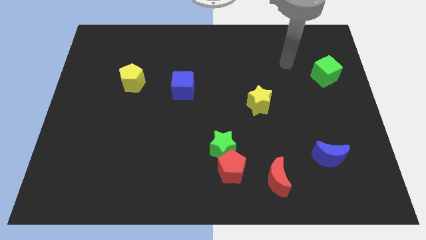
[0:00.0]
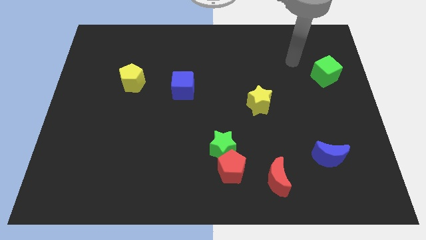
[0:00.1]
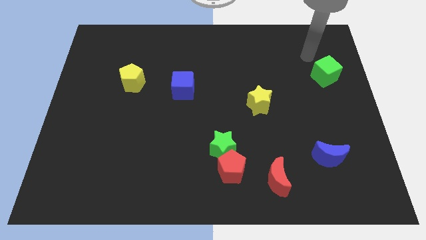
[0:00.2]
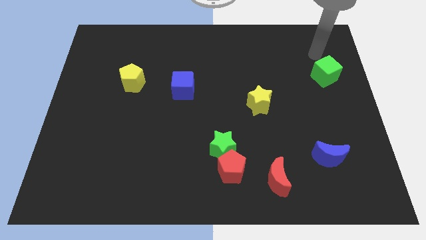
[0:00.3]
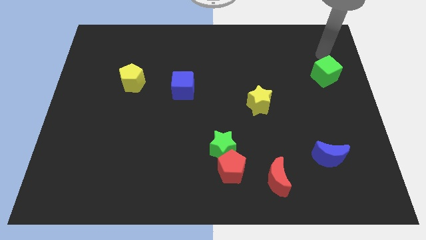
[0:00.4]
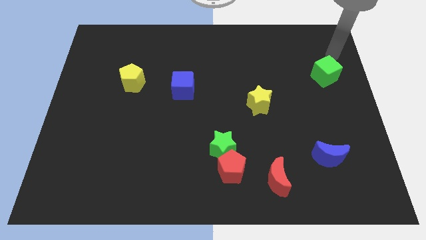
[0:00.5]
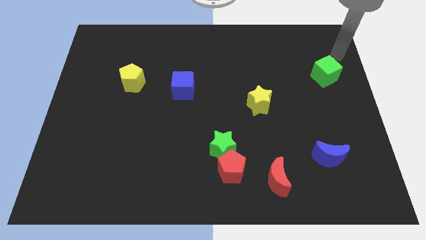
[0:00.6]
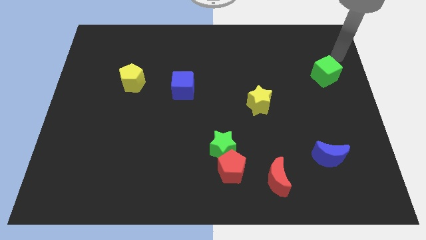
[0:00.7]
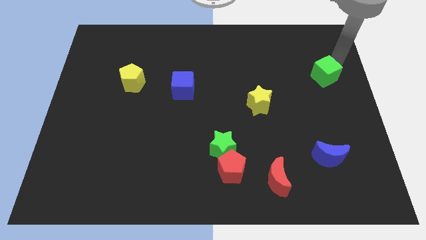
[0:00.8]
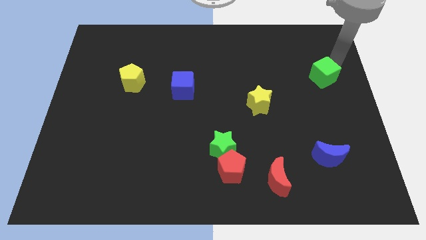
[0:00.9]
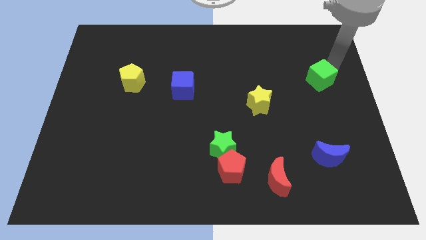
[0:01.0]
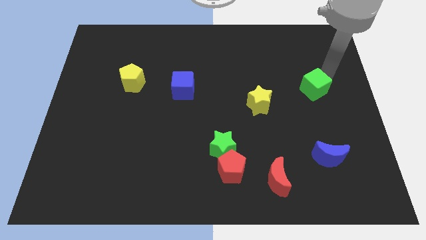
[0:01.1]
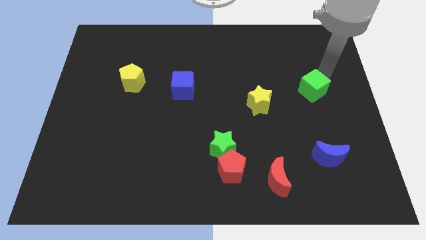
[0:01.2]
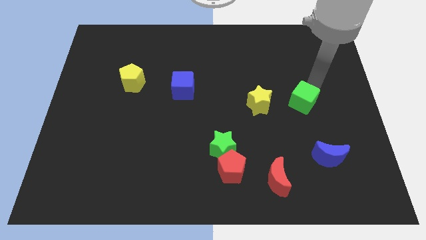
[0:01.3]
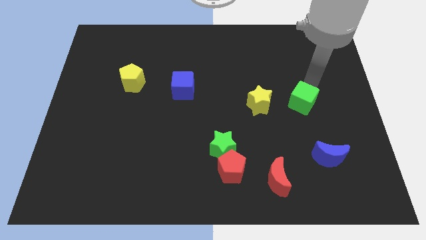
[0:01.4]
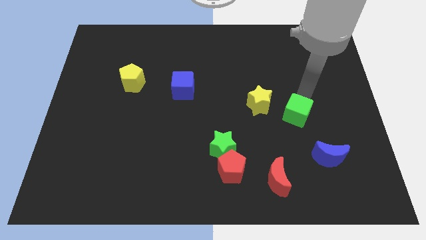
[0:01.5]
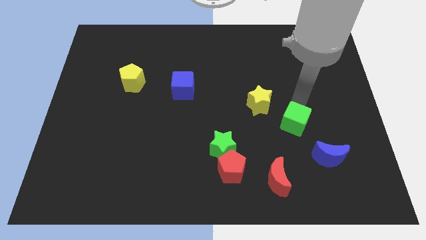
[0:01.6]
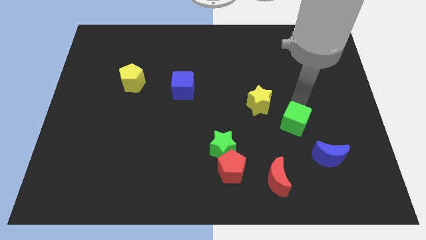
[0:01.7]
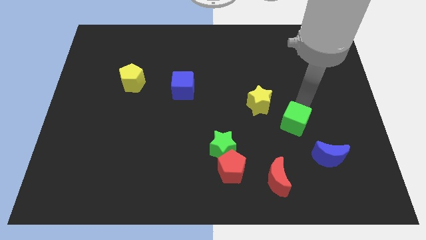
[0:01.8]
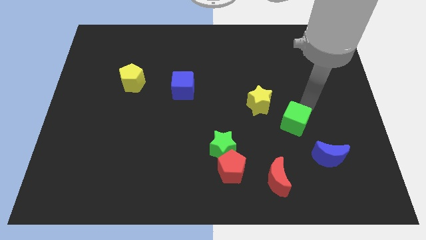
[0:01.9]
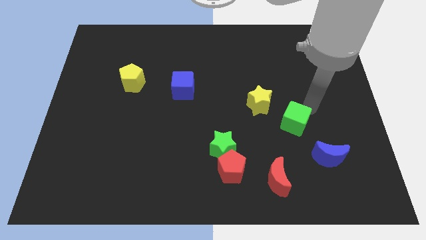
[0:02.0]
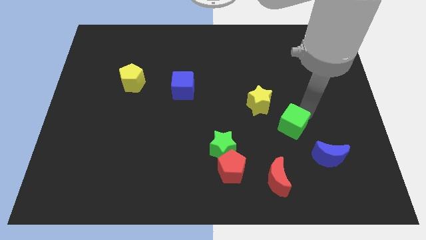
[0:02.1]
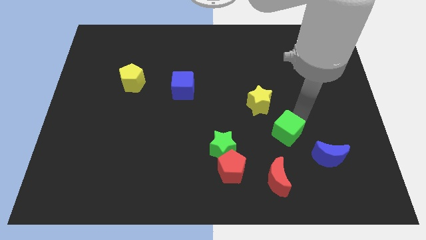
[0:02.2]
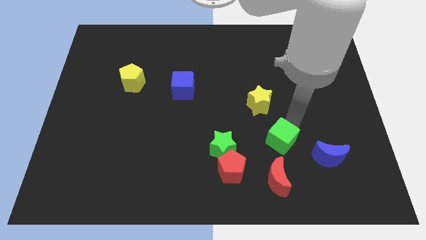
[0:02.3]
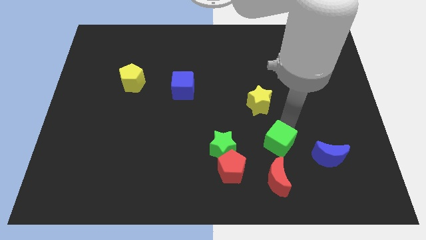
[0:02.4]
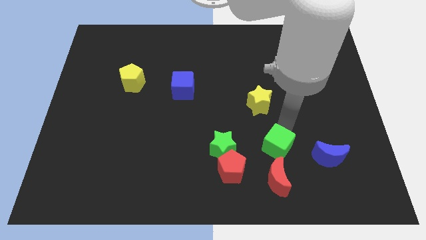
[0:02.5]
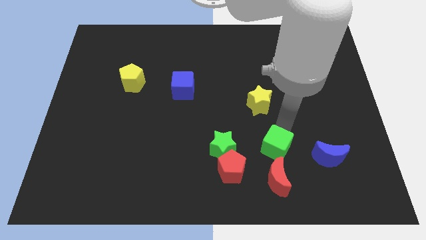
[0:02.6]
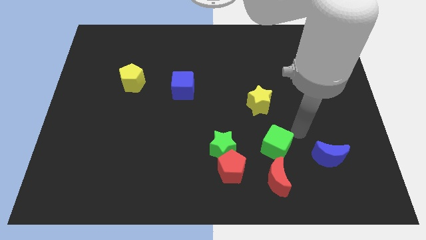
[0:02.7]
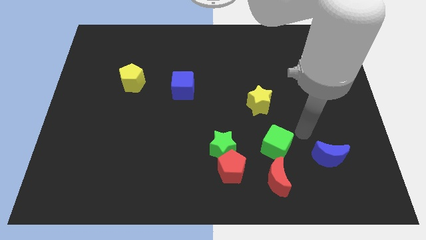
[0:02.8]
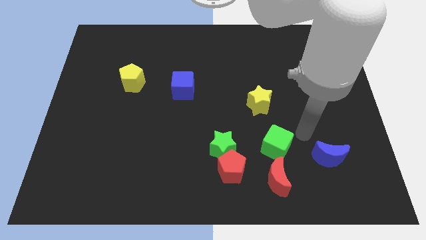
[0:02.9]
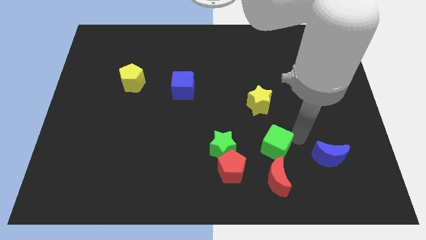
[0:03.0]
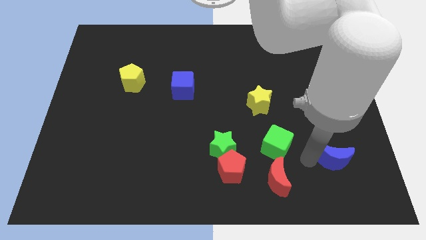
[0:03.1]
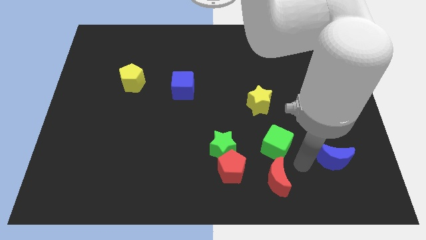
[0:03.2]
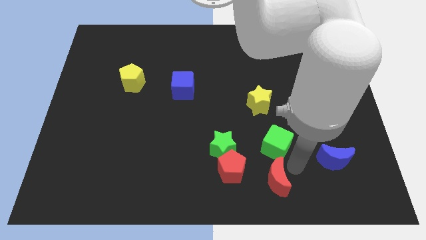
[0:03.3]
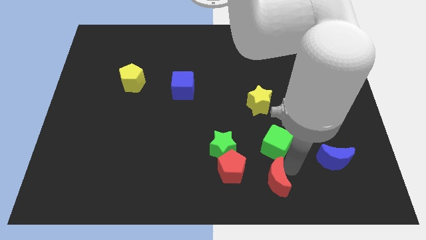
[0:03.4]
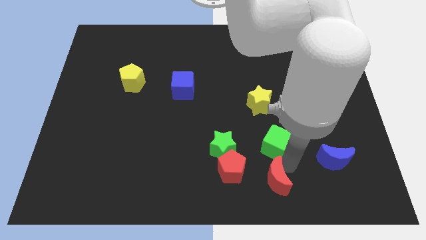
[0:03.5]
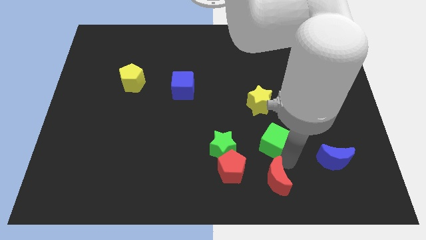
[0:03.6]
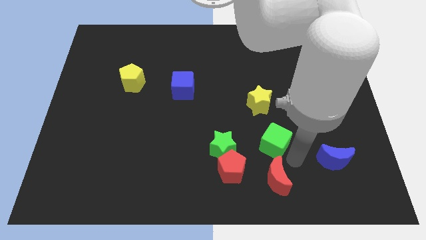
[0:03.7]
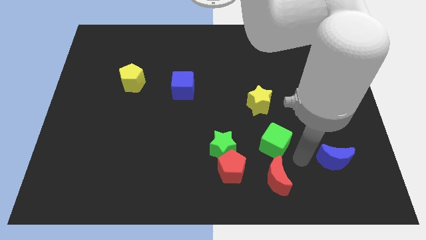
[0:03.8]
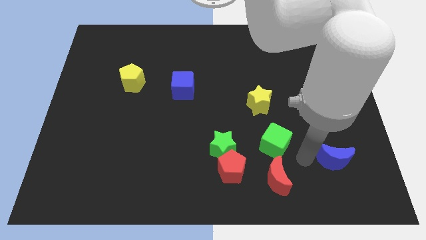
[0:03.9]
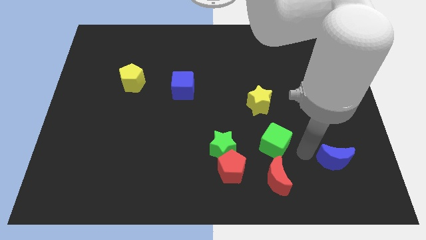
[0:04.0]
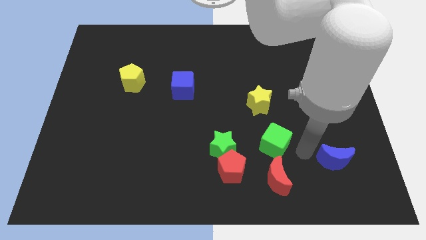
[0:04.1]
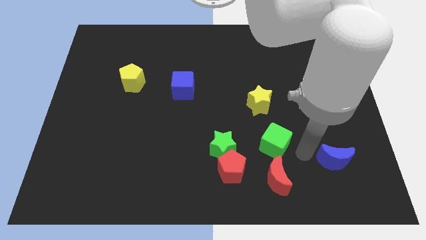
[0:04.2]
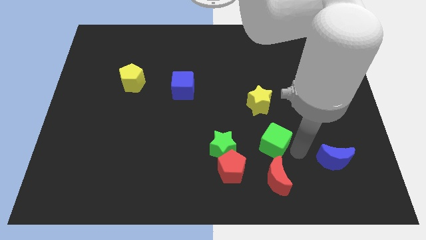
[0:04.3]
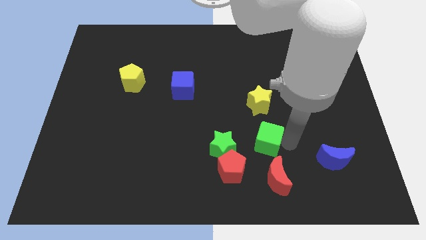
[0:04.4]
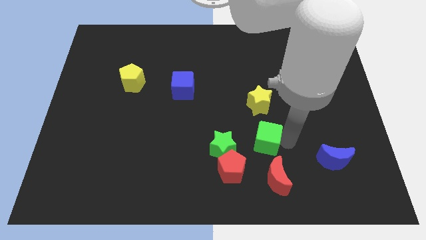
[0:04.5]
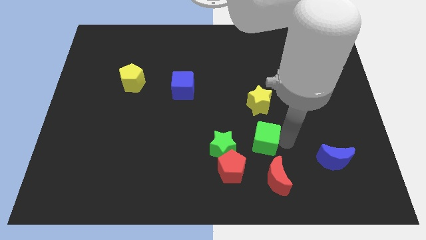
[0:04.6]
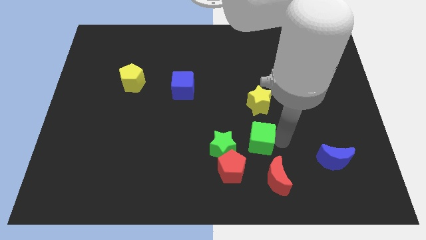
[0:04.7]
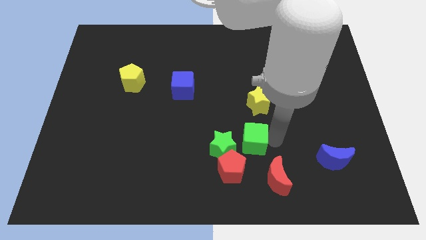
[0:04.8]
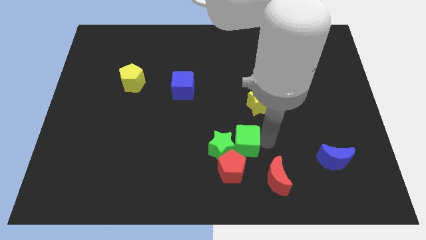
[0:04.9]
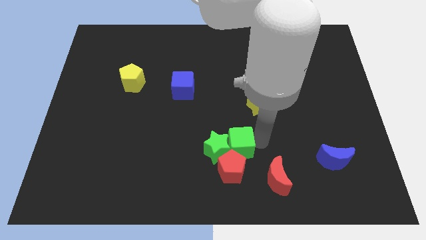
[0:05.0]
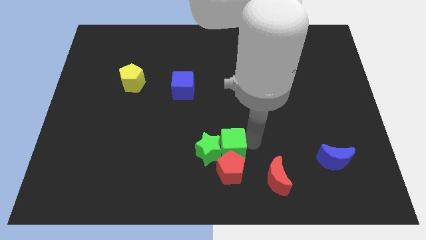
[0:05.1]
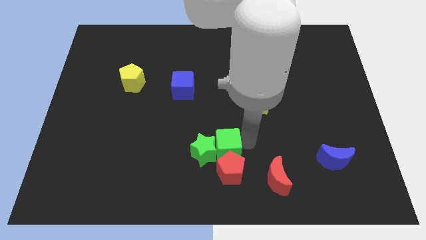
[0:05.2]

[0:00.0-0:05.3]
move the green cube close to the red pentagon

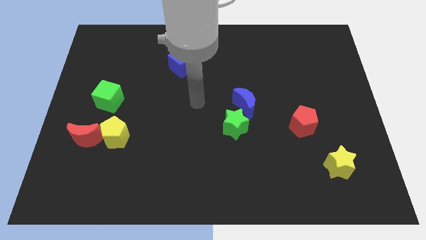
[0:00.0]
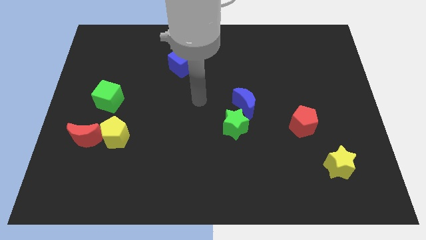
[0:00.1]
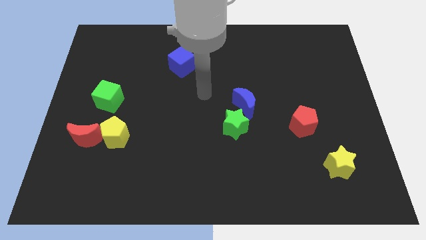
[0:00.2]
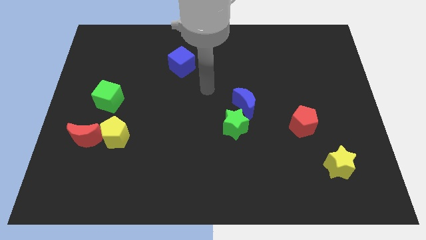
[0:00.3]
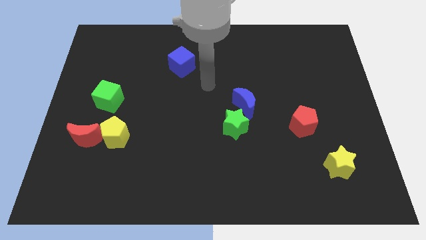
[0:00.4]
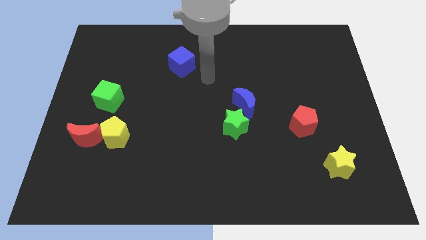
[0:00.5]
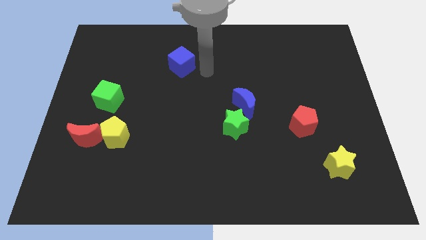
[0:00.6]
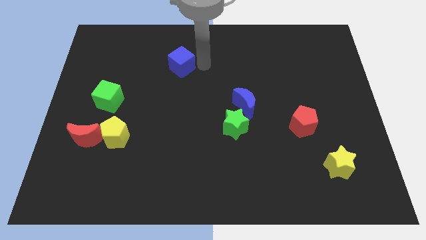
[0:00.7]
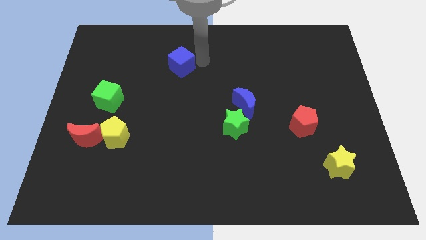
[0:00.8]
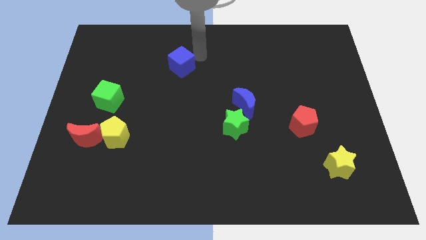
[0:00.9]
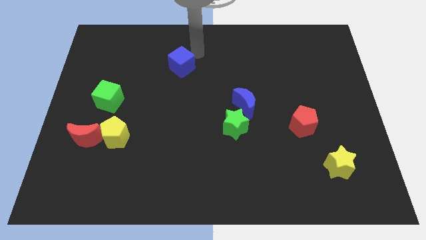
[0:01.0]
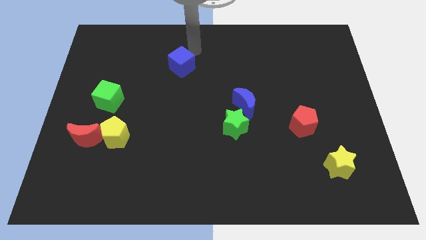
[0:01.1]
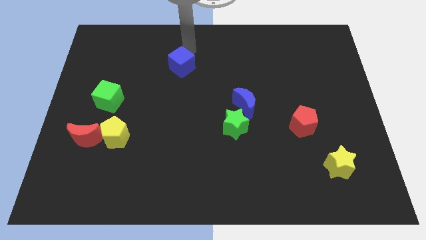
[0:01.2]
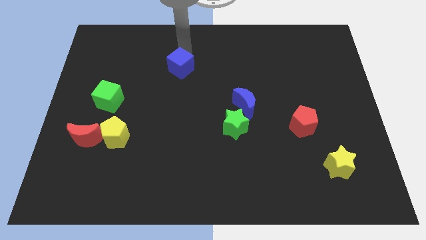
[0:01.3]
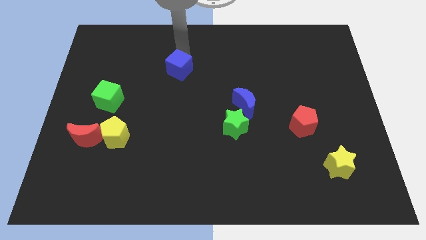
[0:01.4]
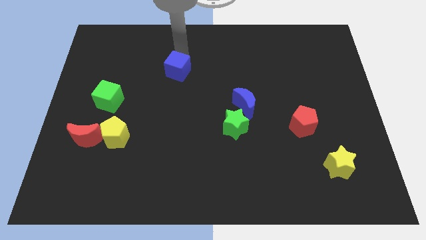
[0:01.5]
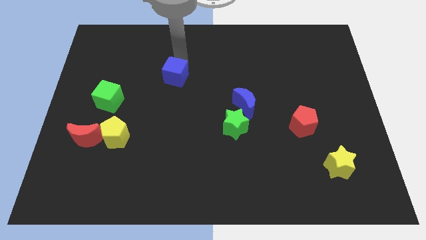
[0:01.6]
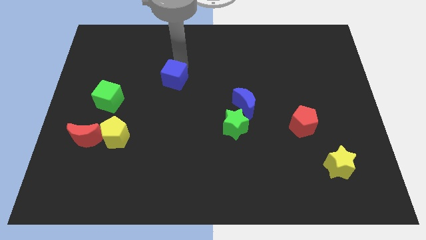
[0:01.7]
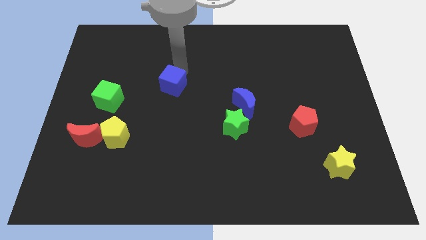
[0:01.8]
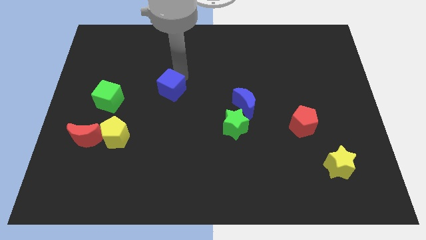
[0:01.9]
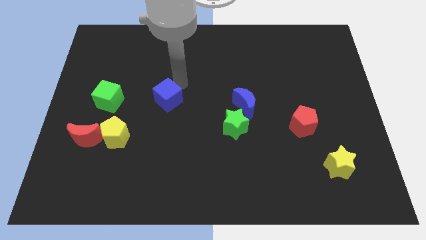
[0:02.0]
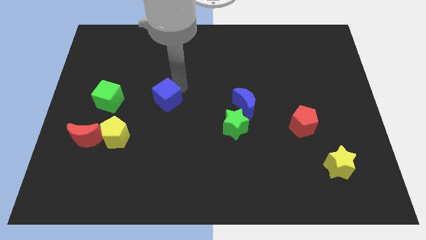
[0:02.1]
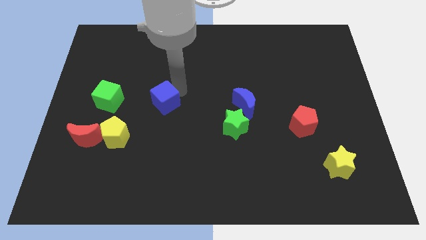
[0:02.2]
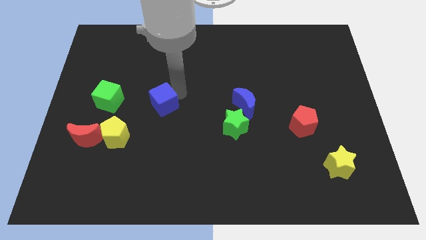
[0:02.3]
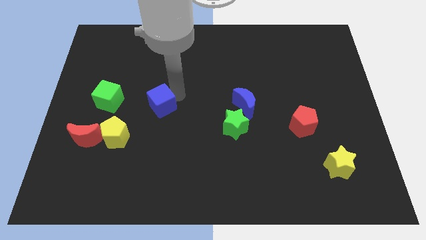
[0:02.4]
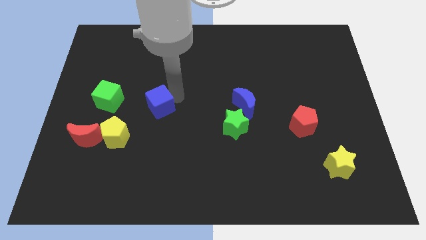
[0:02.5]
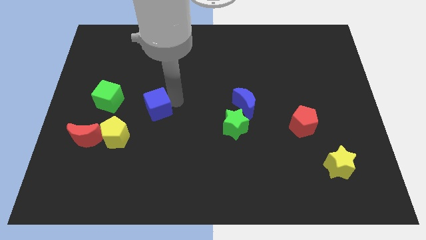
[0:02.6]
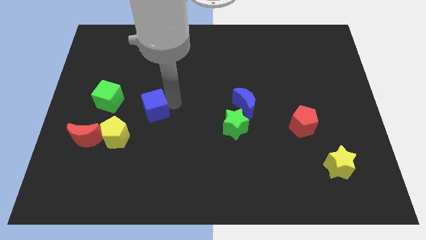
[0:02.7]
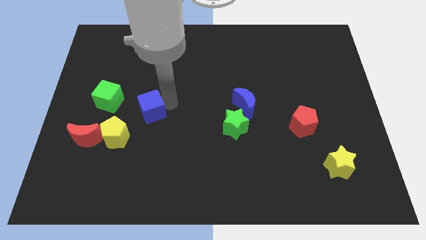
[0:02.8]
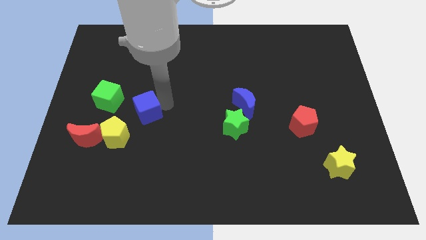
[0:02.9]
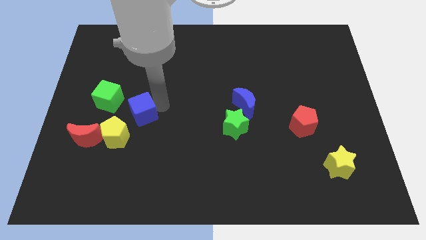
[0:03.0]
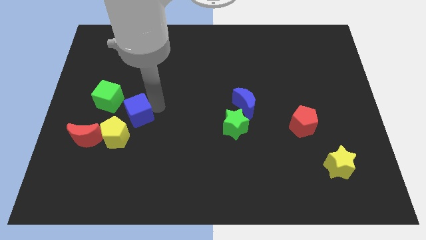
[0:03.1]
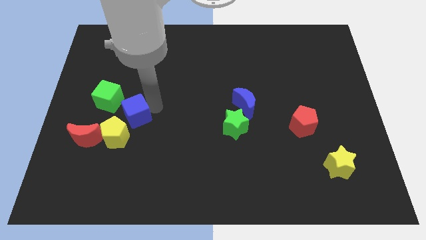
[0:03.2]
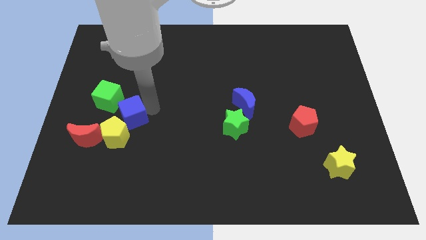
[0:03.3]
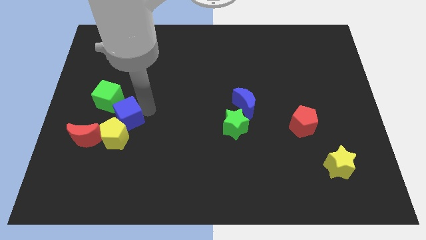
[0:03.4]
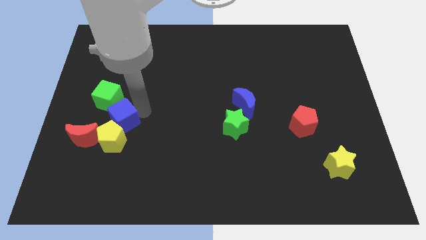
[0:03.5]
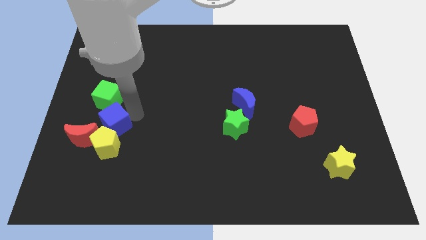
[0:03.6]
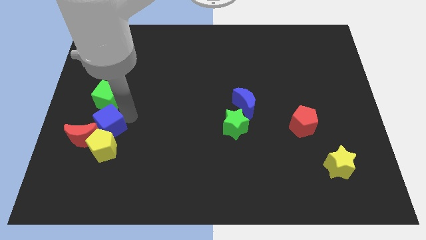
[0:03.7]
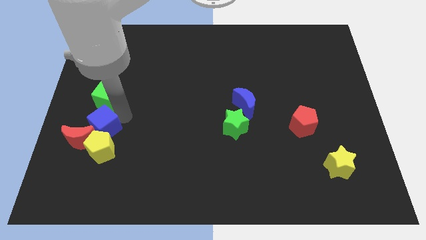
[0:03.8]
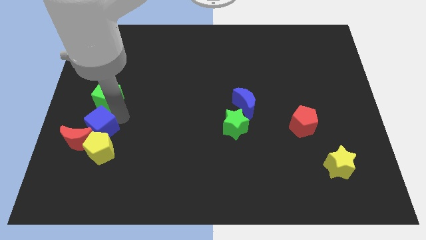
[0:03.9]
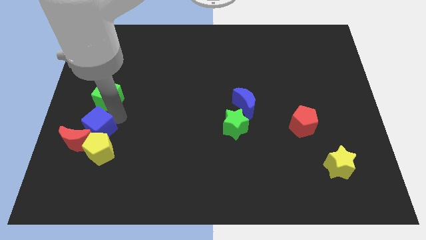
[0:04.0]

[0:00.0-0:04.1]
slide the blue cube towards the red moon
